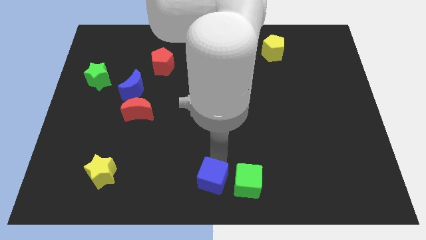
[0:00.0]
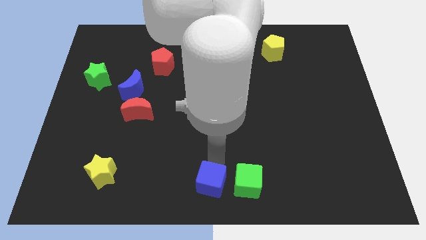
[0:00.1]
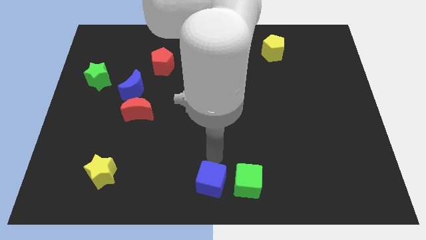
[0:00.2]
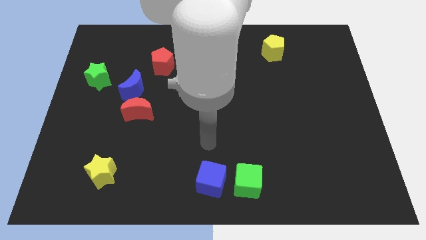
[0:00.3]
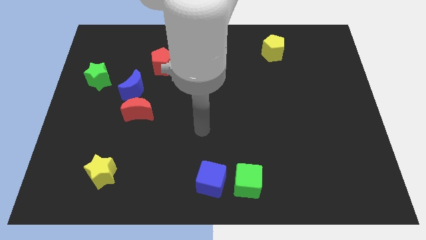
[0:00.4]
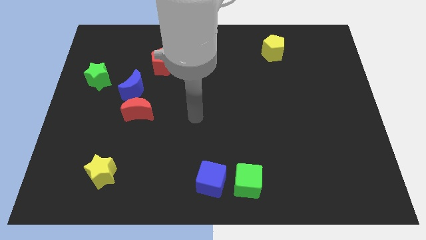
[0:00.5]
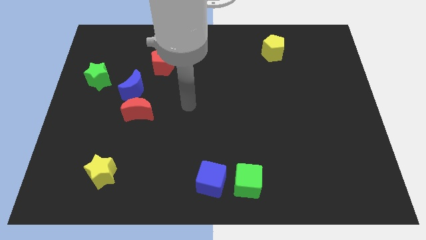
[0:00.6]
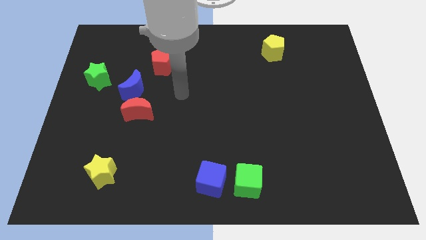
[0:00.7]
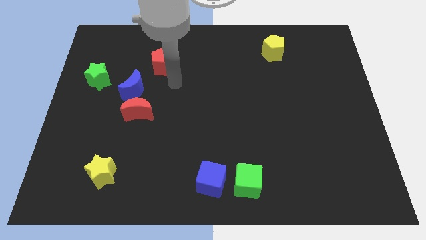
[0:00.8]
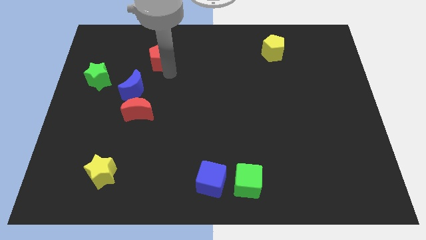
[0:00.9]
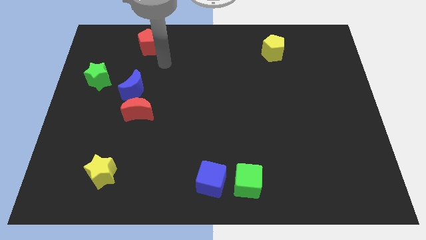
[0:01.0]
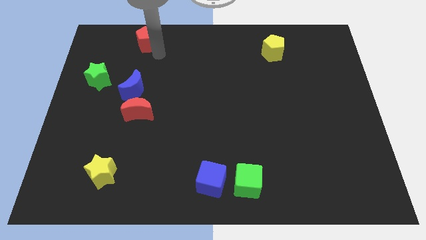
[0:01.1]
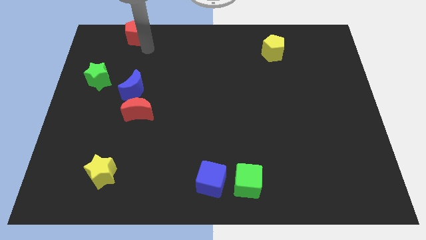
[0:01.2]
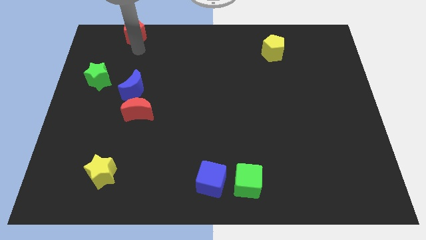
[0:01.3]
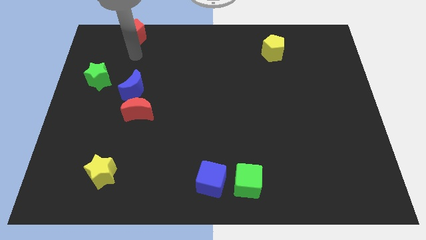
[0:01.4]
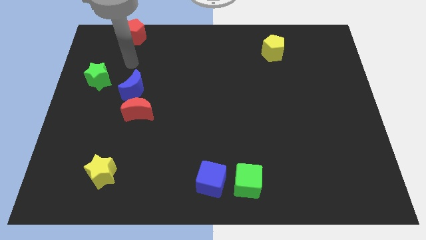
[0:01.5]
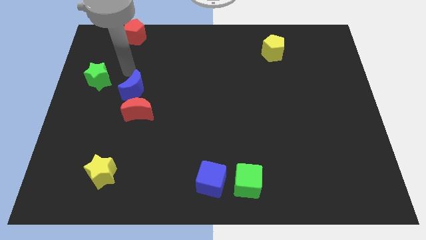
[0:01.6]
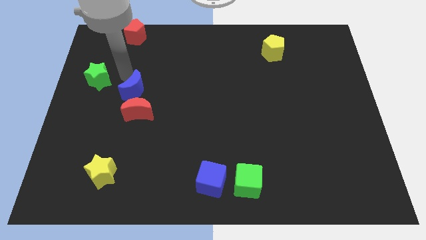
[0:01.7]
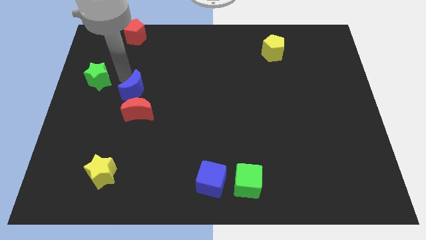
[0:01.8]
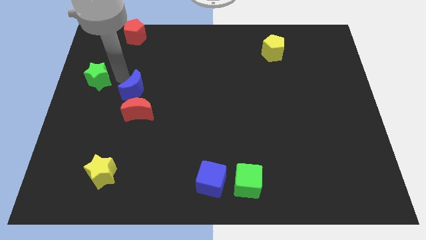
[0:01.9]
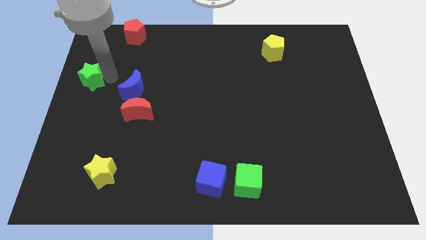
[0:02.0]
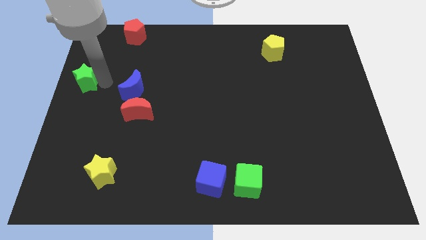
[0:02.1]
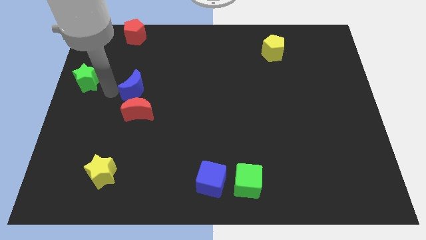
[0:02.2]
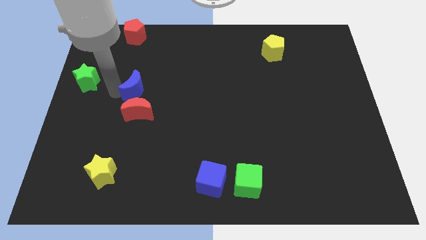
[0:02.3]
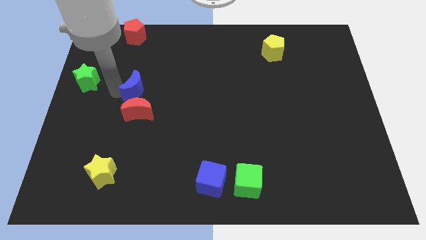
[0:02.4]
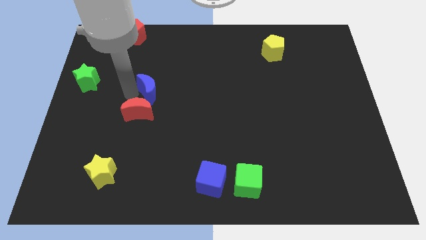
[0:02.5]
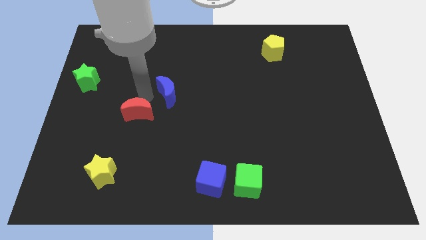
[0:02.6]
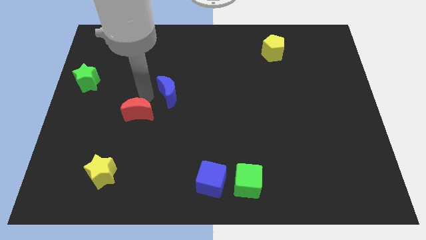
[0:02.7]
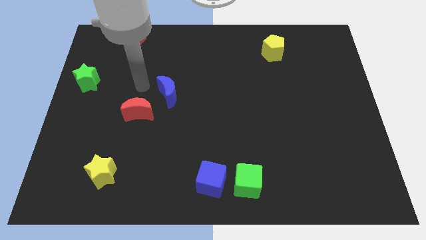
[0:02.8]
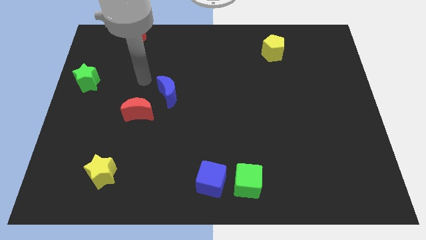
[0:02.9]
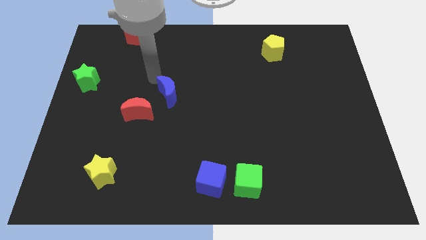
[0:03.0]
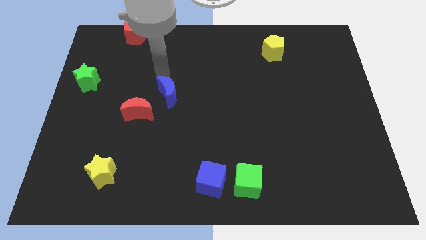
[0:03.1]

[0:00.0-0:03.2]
make a triangle out of green starblue moon and the red pentagon

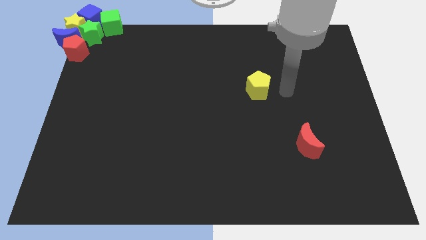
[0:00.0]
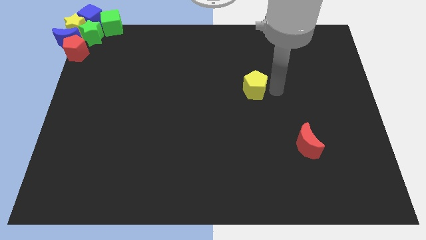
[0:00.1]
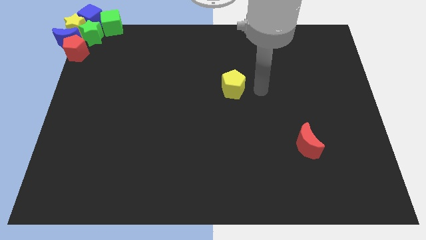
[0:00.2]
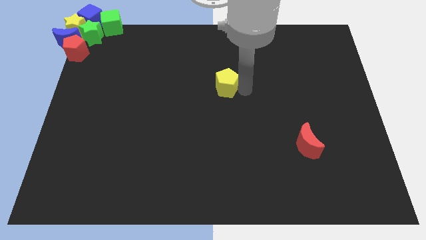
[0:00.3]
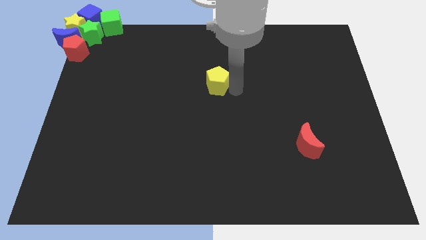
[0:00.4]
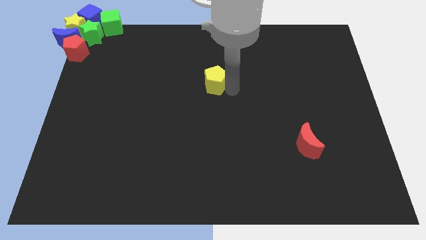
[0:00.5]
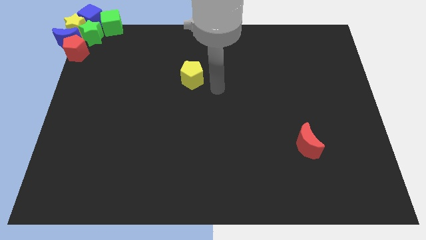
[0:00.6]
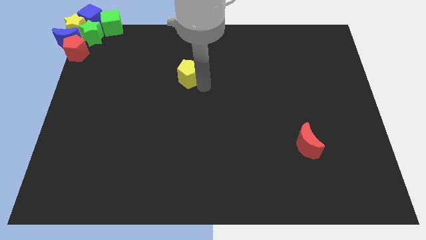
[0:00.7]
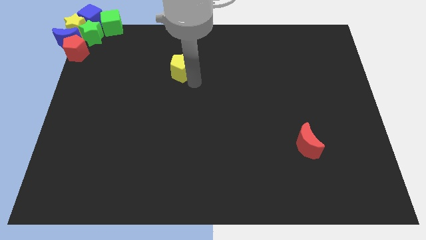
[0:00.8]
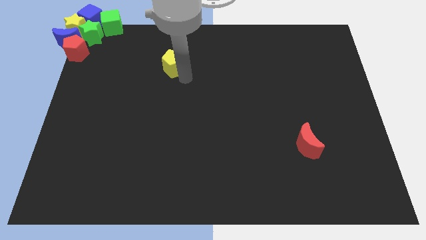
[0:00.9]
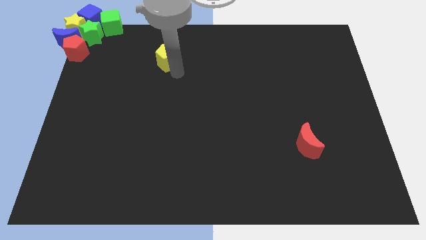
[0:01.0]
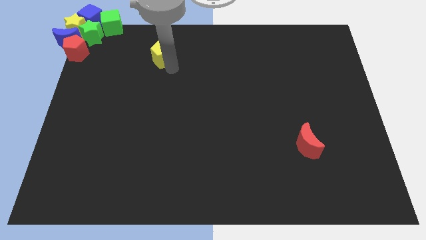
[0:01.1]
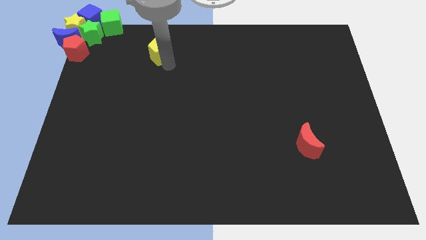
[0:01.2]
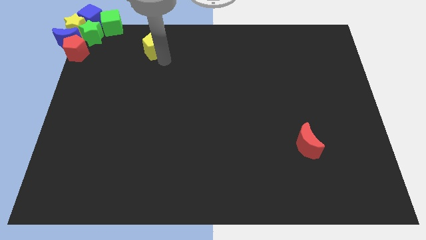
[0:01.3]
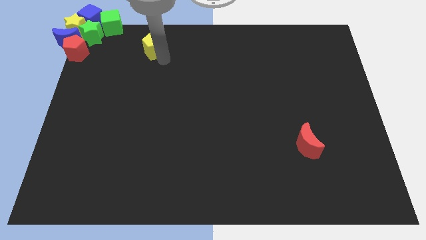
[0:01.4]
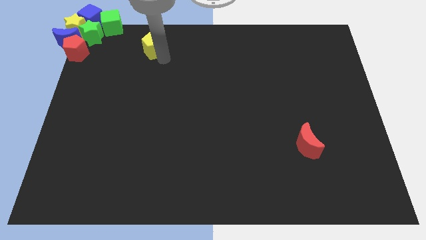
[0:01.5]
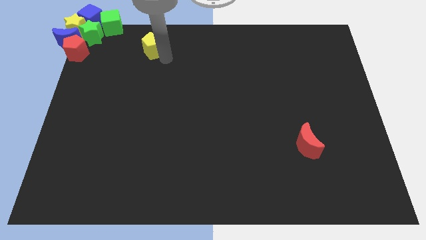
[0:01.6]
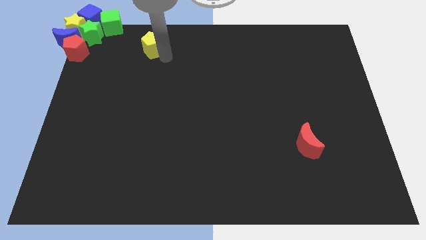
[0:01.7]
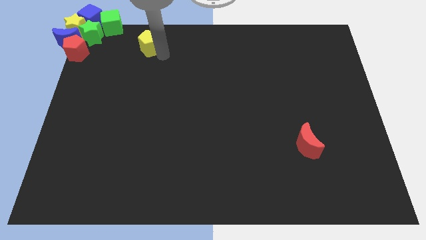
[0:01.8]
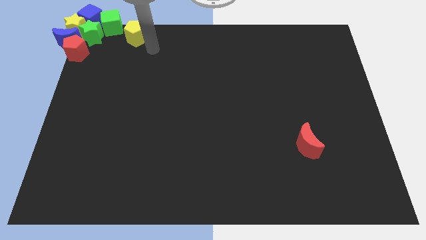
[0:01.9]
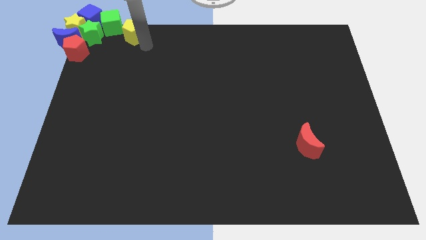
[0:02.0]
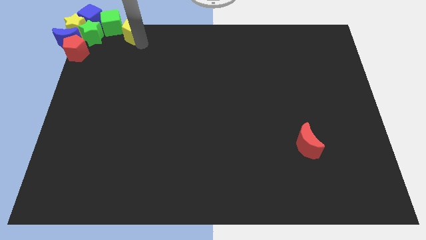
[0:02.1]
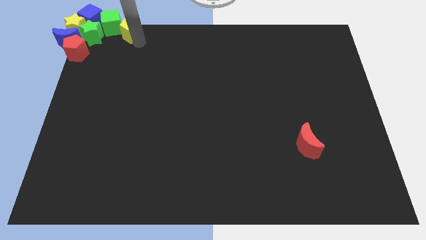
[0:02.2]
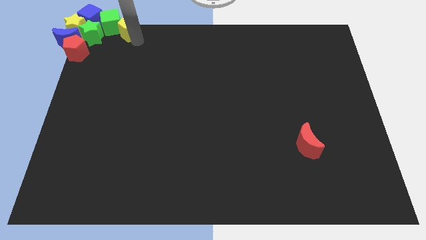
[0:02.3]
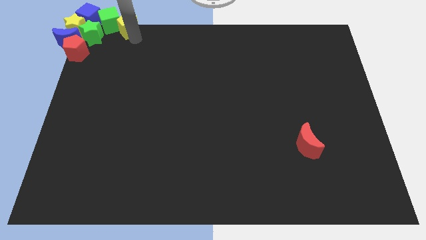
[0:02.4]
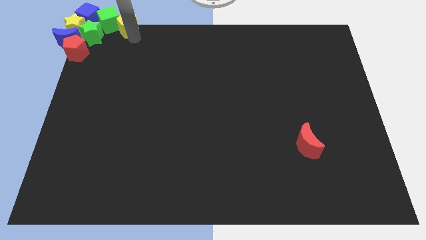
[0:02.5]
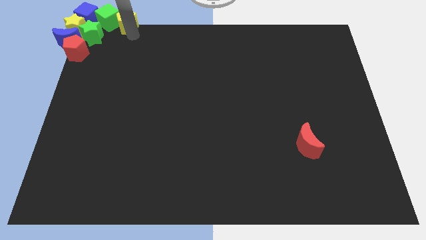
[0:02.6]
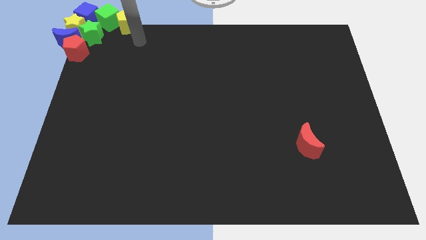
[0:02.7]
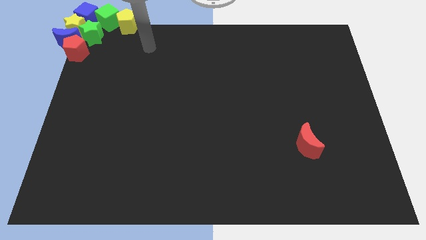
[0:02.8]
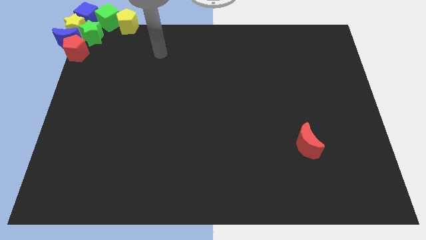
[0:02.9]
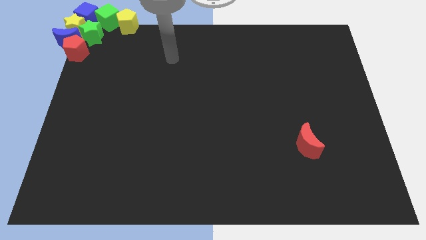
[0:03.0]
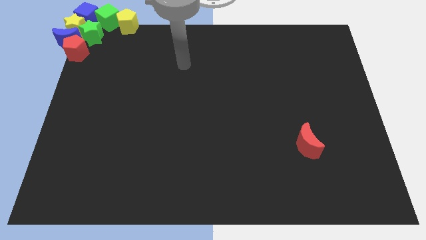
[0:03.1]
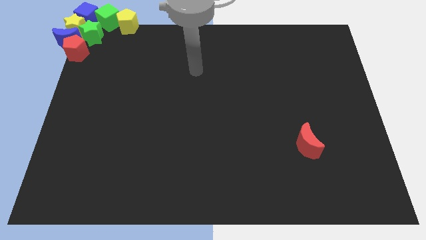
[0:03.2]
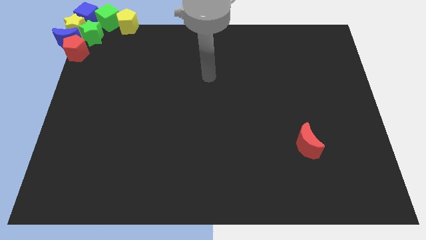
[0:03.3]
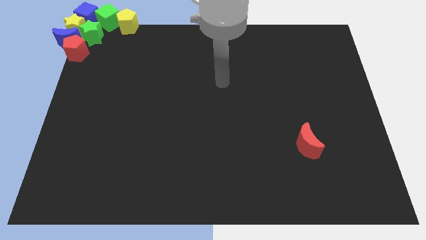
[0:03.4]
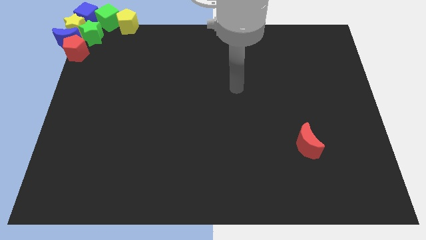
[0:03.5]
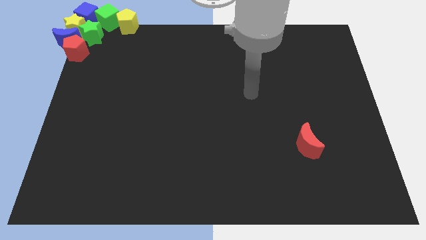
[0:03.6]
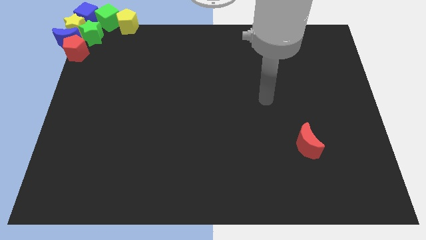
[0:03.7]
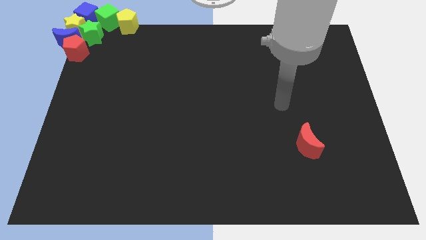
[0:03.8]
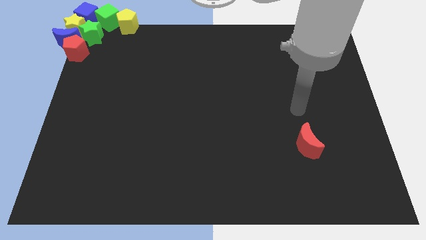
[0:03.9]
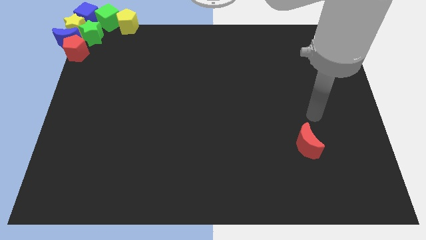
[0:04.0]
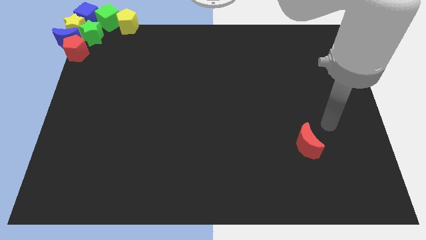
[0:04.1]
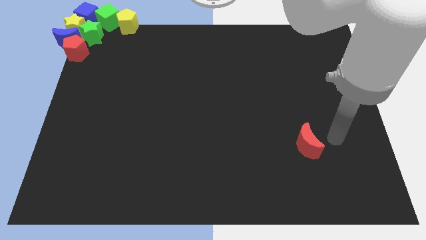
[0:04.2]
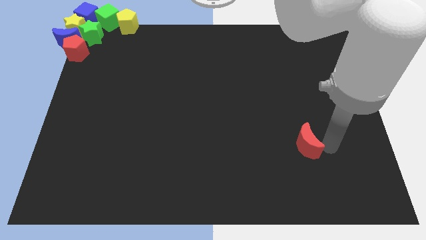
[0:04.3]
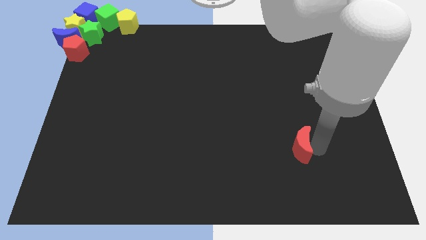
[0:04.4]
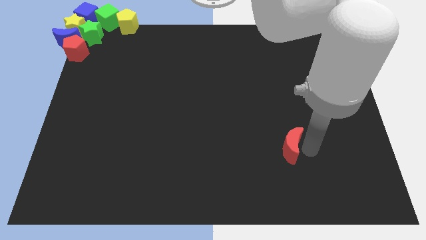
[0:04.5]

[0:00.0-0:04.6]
place the yellow pentagon right to the green cube

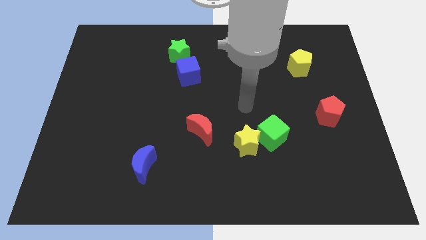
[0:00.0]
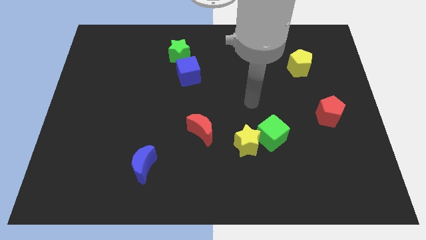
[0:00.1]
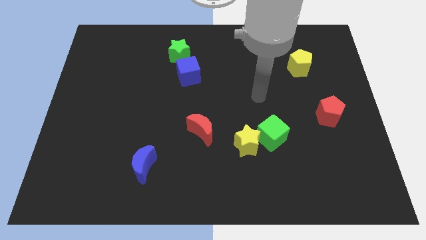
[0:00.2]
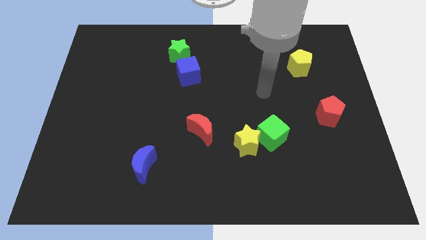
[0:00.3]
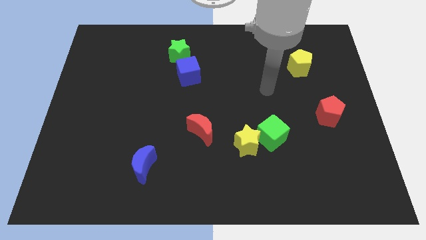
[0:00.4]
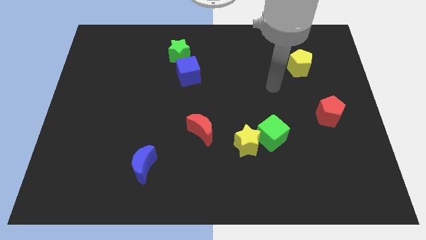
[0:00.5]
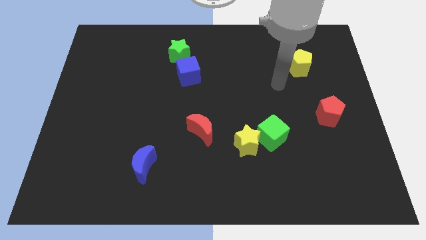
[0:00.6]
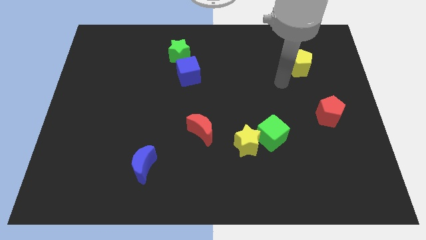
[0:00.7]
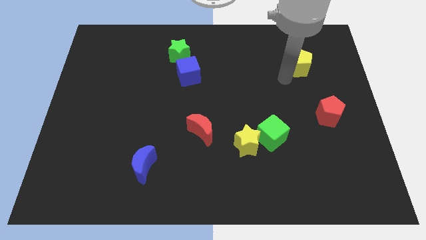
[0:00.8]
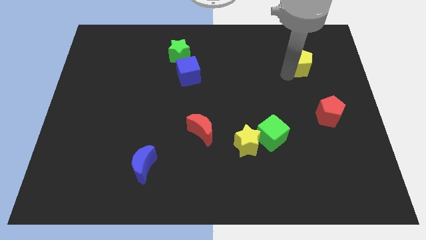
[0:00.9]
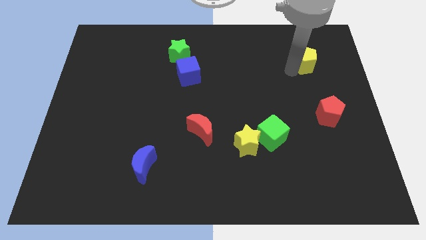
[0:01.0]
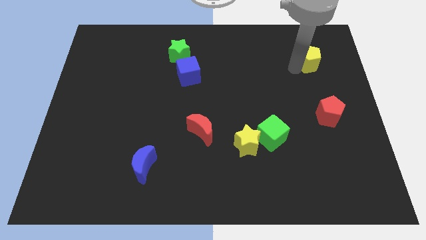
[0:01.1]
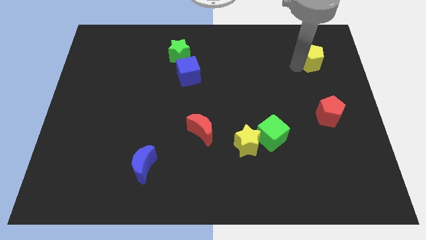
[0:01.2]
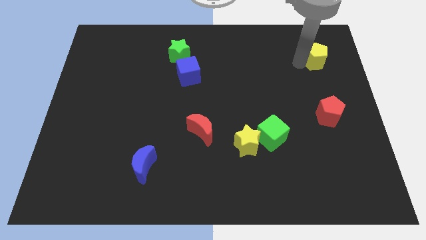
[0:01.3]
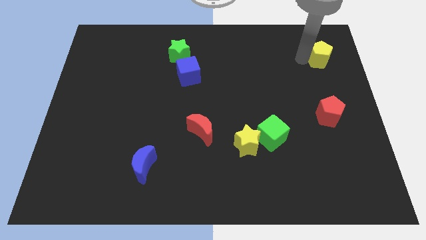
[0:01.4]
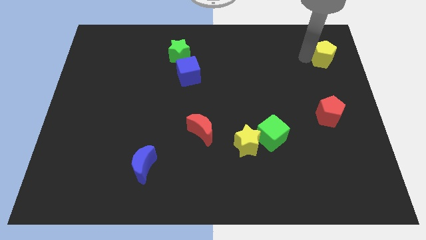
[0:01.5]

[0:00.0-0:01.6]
push the yellow pentagon above the red pentagon
